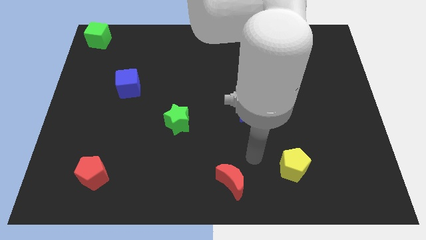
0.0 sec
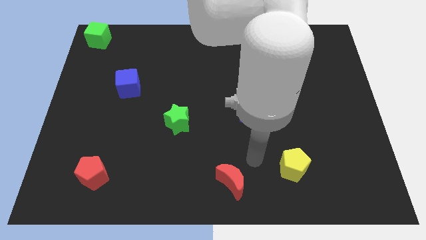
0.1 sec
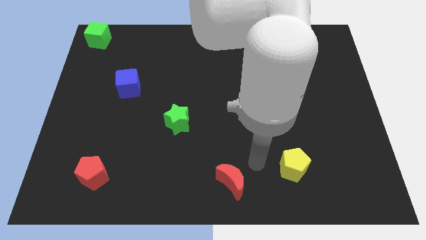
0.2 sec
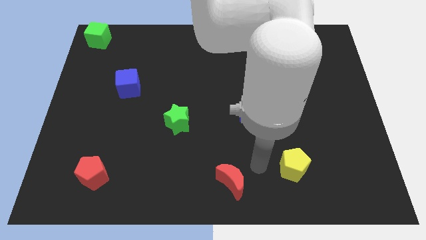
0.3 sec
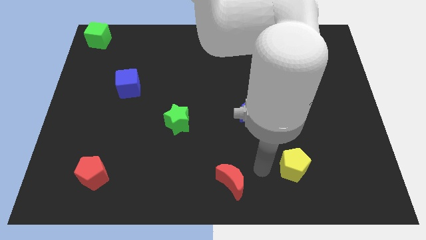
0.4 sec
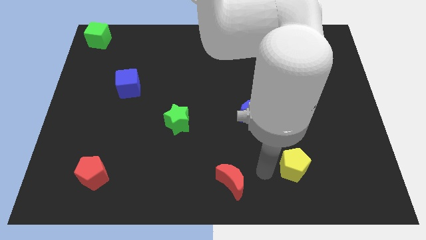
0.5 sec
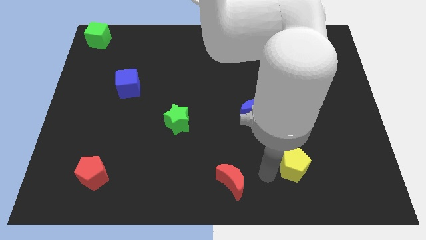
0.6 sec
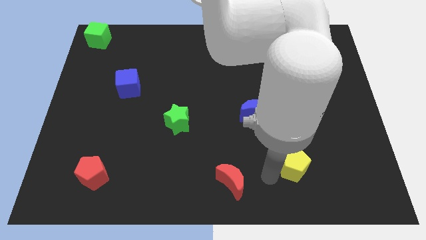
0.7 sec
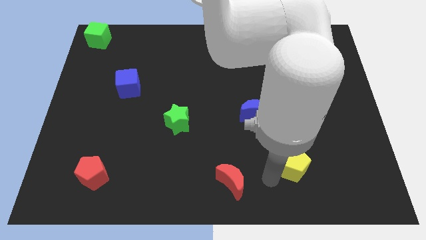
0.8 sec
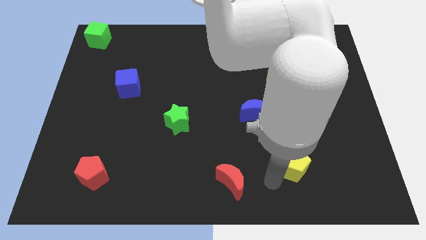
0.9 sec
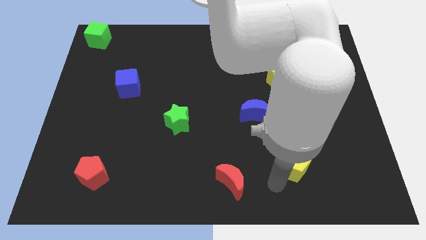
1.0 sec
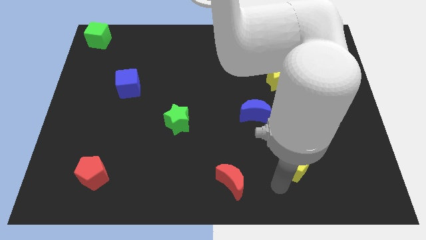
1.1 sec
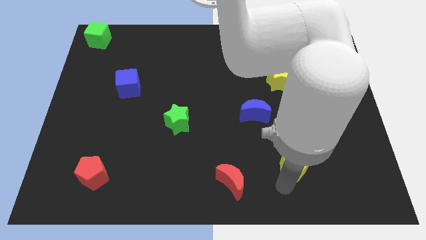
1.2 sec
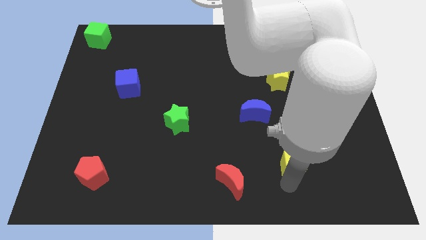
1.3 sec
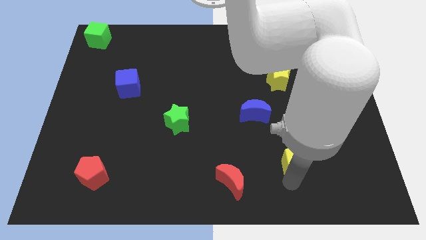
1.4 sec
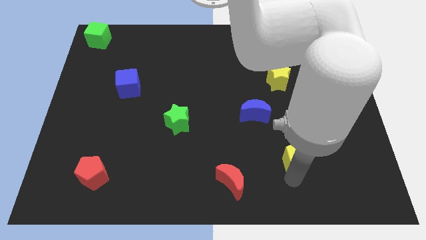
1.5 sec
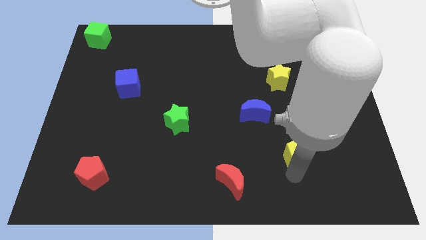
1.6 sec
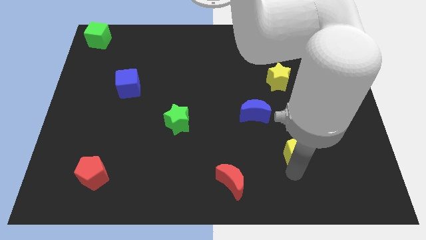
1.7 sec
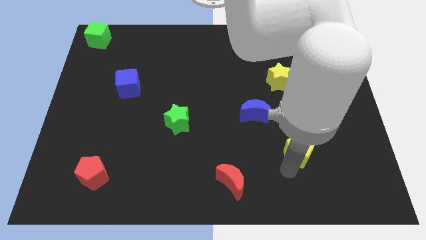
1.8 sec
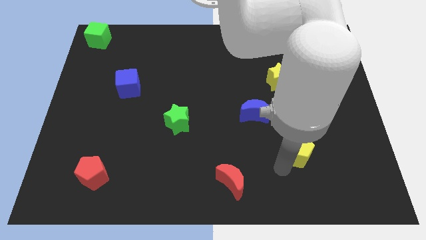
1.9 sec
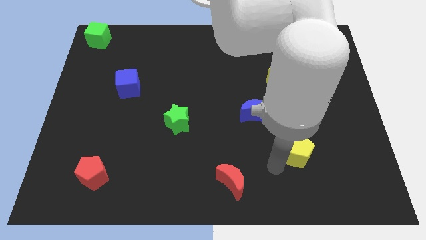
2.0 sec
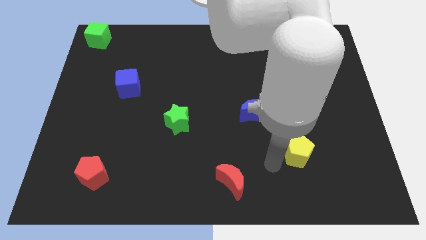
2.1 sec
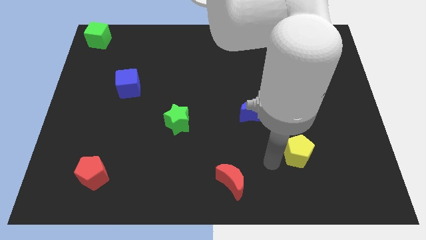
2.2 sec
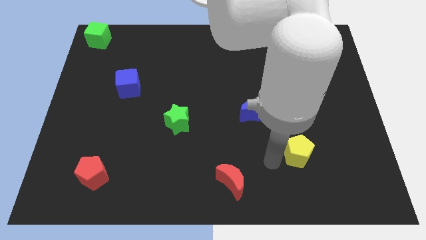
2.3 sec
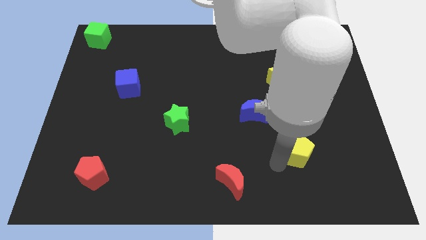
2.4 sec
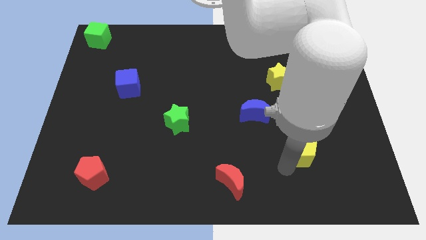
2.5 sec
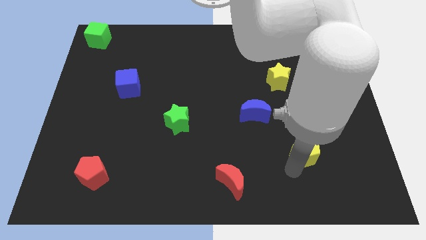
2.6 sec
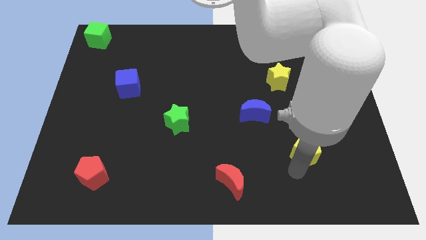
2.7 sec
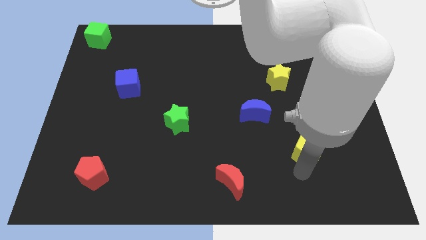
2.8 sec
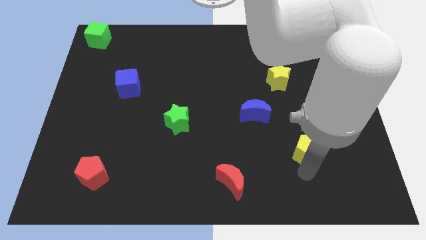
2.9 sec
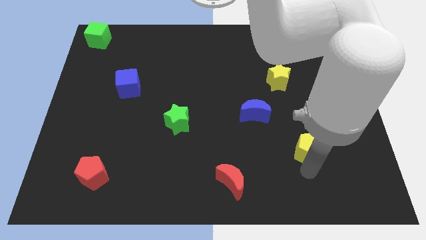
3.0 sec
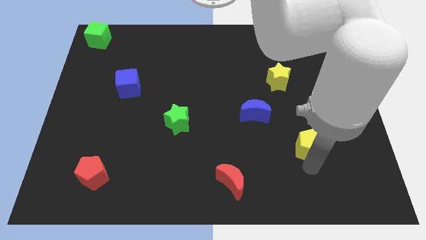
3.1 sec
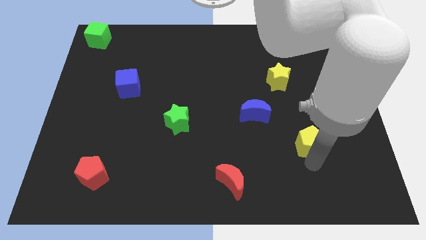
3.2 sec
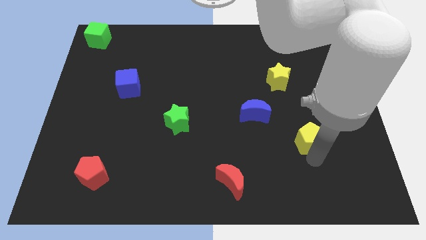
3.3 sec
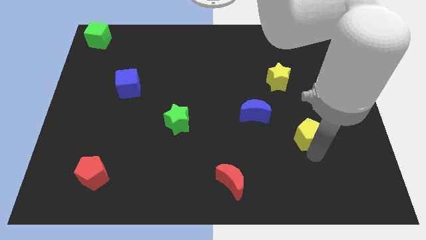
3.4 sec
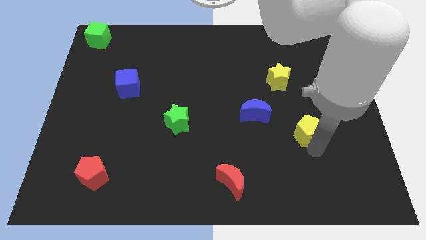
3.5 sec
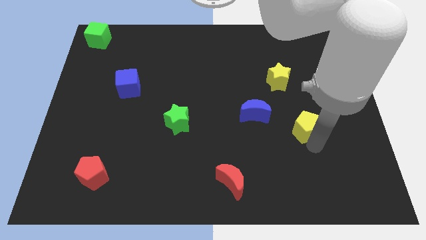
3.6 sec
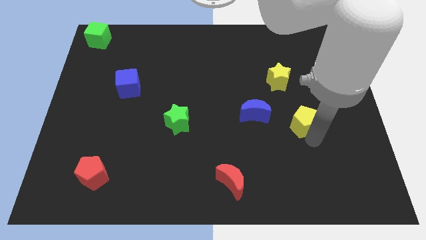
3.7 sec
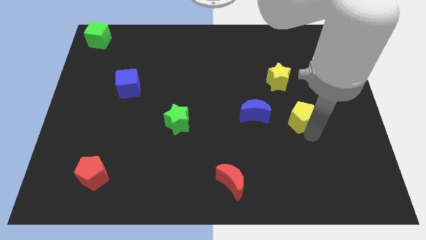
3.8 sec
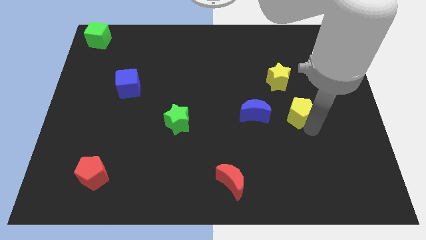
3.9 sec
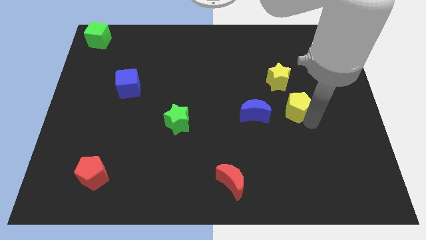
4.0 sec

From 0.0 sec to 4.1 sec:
place yellow pentagon to the right of blue moon

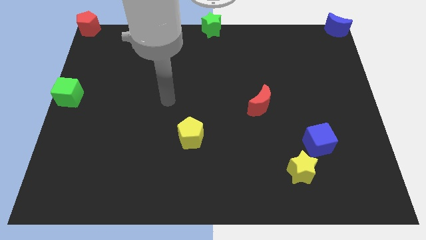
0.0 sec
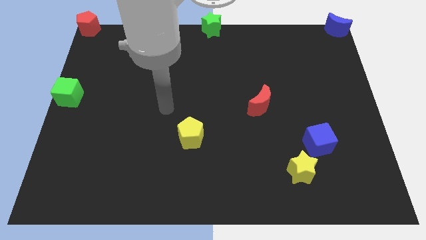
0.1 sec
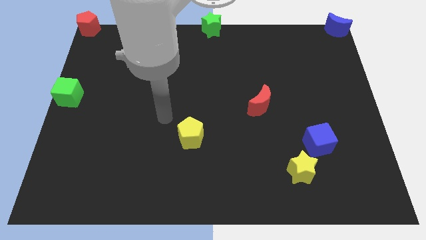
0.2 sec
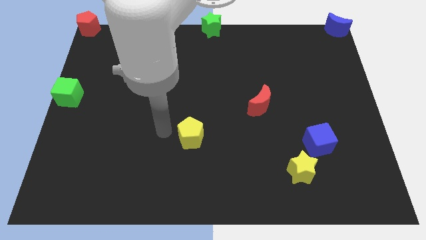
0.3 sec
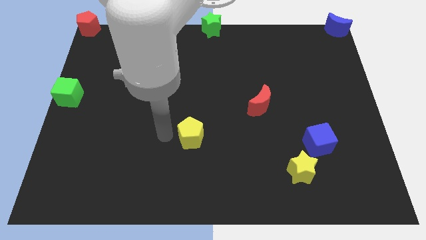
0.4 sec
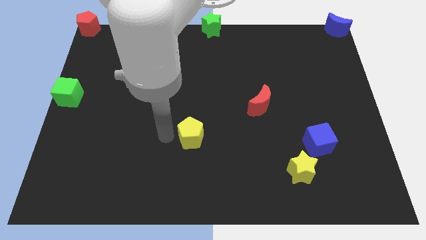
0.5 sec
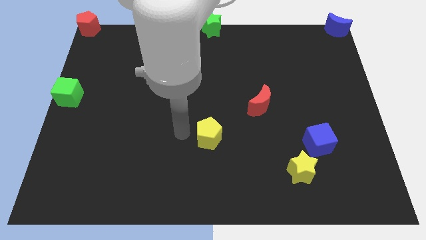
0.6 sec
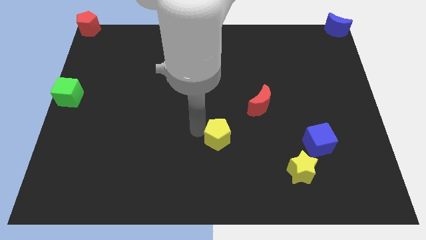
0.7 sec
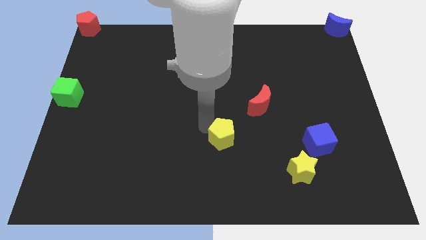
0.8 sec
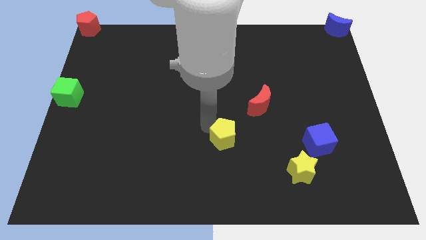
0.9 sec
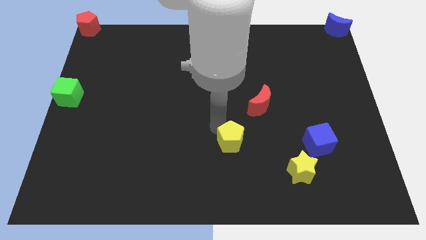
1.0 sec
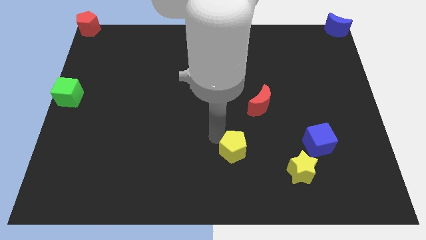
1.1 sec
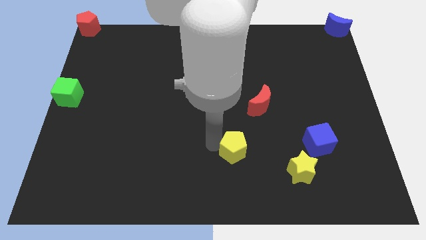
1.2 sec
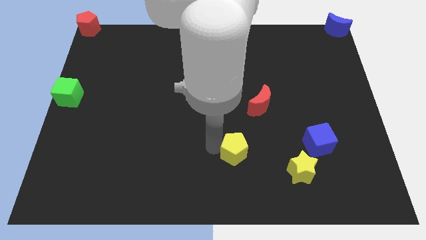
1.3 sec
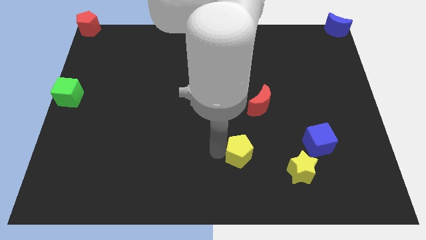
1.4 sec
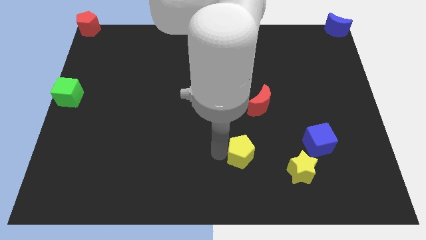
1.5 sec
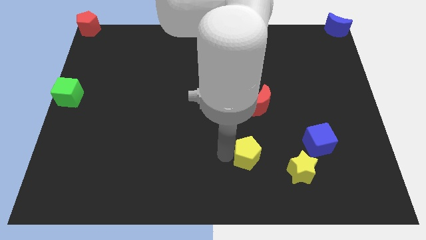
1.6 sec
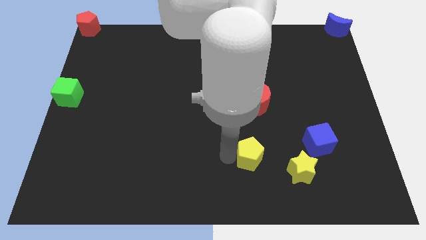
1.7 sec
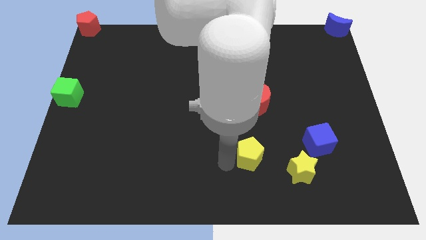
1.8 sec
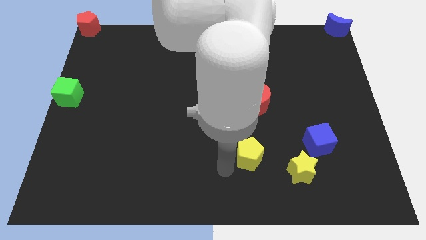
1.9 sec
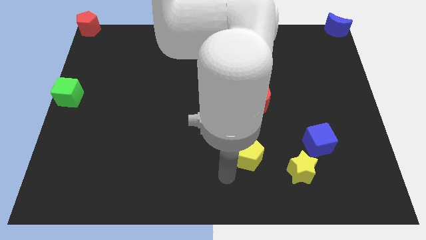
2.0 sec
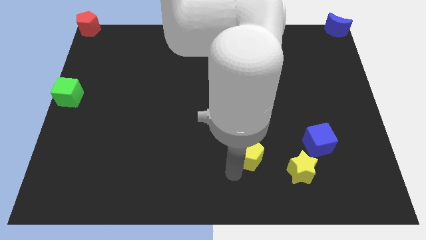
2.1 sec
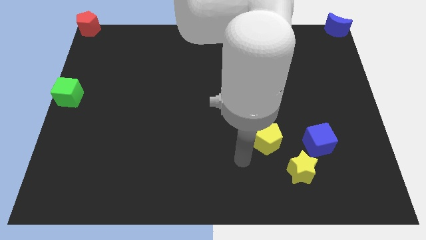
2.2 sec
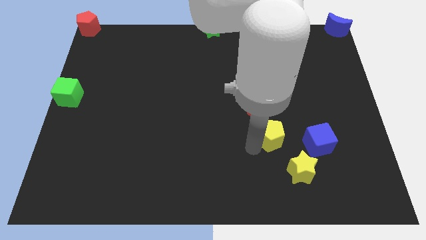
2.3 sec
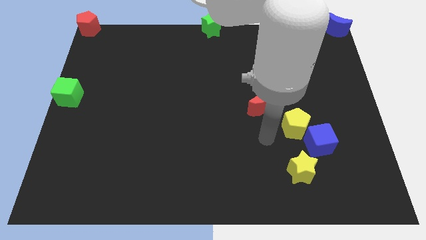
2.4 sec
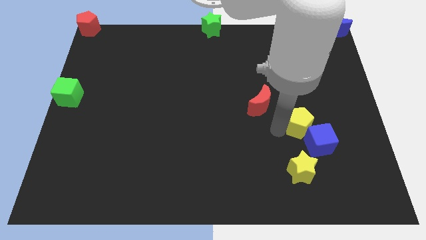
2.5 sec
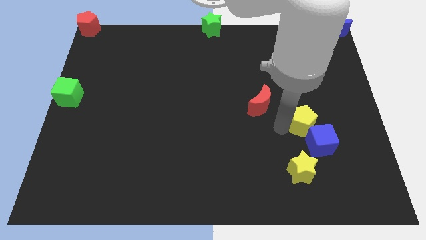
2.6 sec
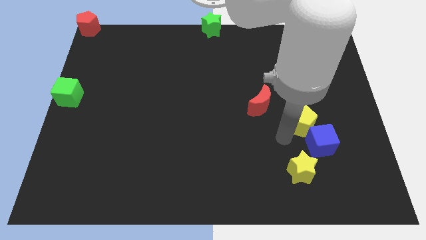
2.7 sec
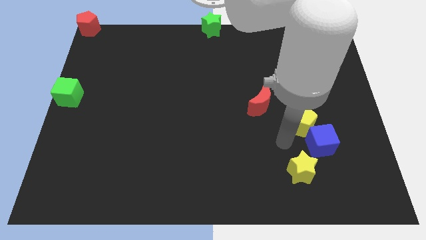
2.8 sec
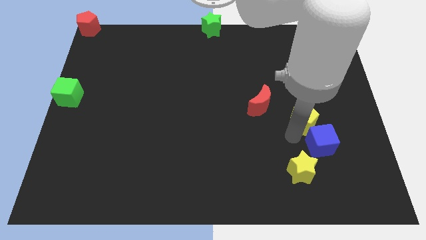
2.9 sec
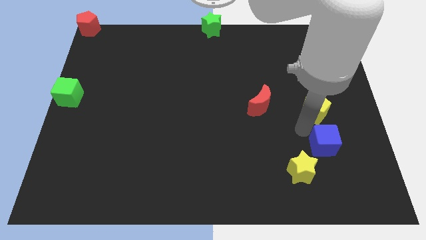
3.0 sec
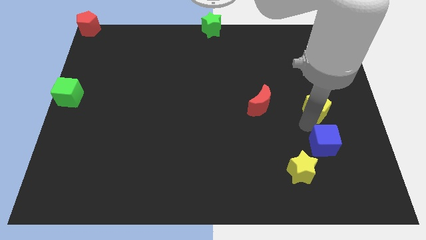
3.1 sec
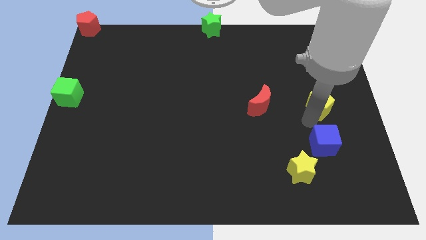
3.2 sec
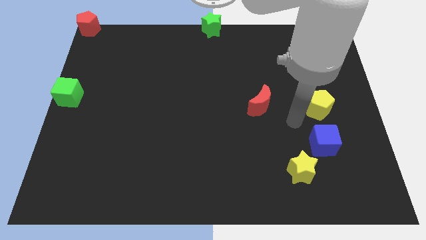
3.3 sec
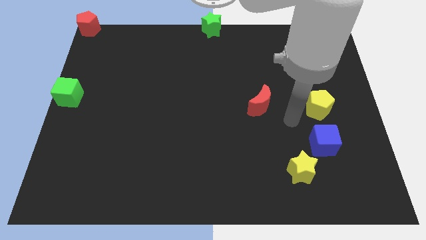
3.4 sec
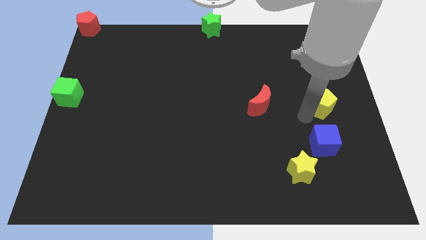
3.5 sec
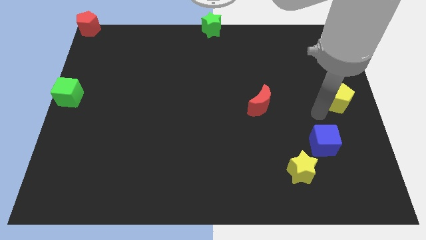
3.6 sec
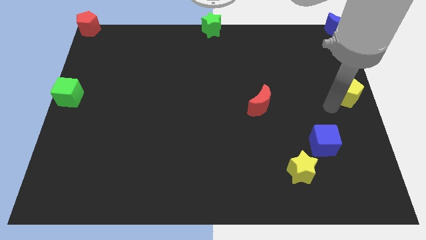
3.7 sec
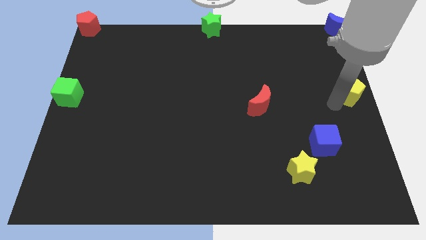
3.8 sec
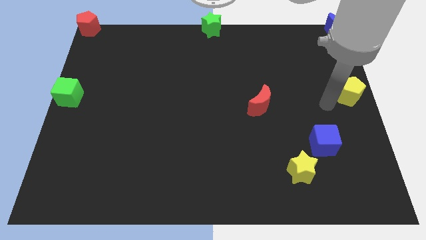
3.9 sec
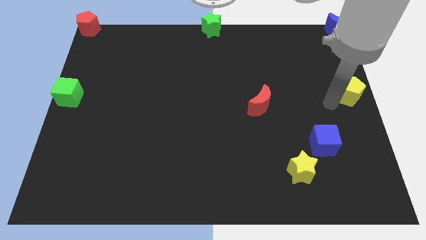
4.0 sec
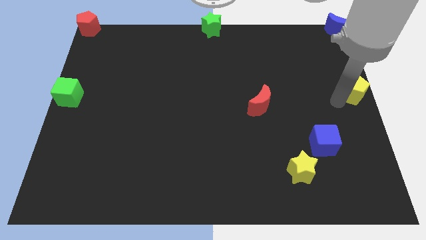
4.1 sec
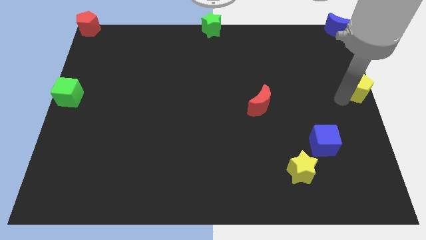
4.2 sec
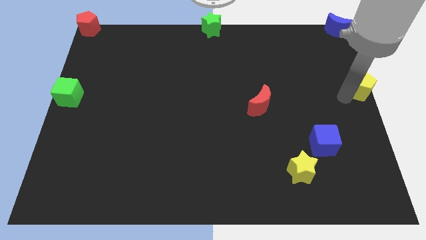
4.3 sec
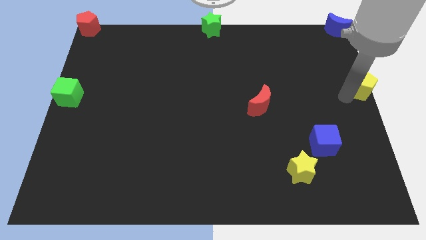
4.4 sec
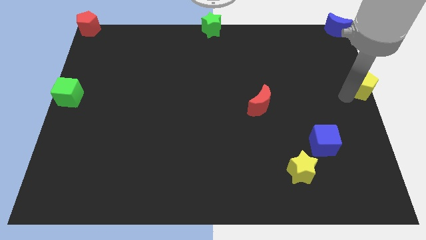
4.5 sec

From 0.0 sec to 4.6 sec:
place the yellow pentagon towards right center of the board

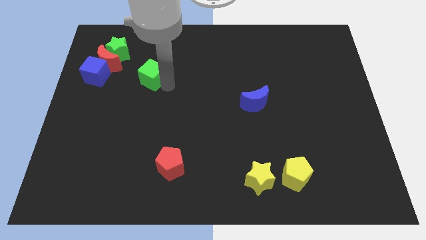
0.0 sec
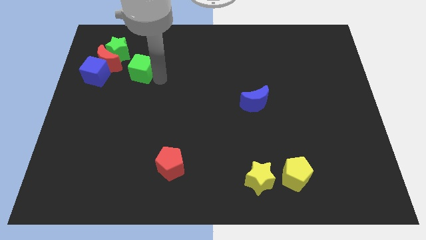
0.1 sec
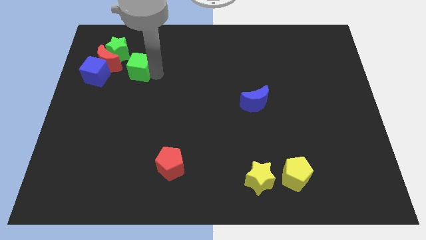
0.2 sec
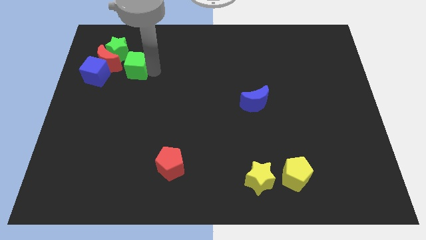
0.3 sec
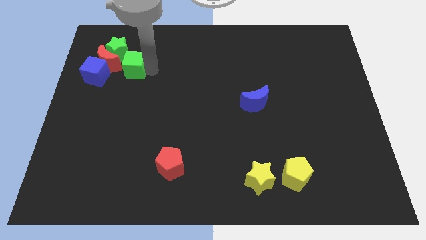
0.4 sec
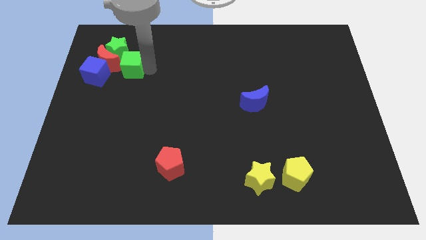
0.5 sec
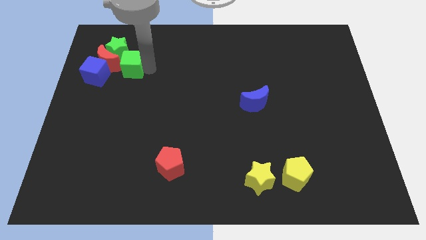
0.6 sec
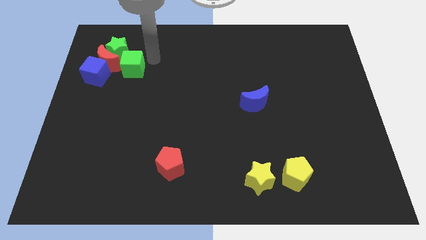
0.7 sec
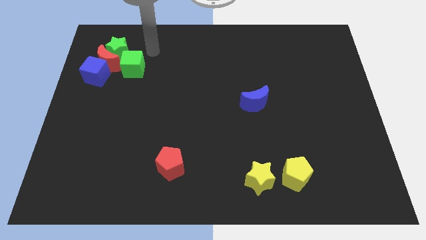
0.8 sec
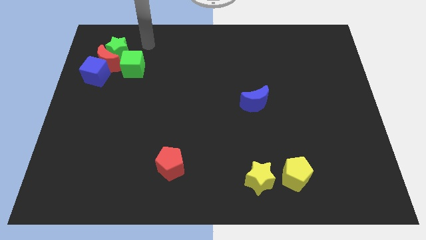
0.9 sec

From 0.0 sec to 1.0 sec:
place the green cube below the green star
